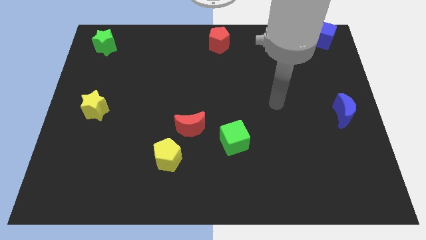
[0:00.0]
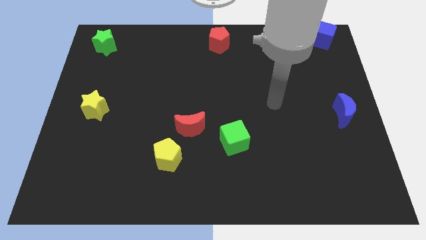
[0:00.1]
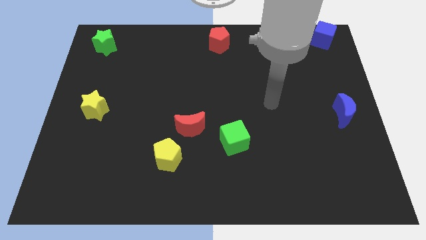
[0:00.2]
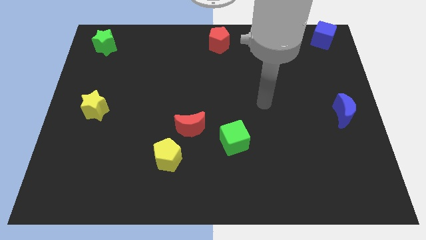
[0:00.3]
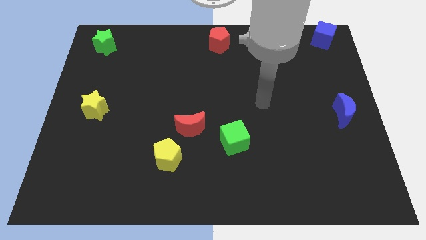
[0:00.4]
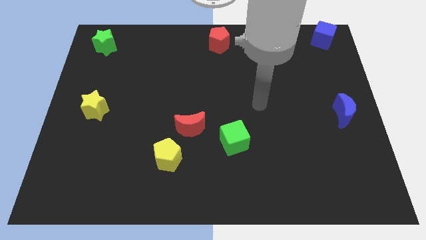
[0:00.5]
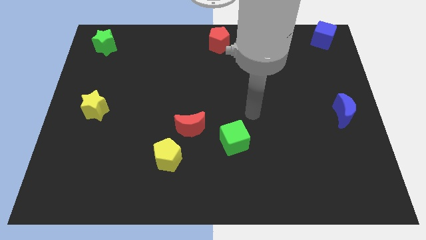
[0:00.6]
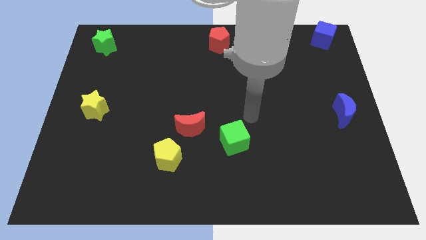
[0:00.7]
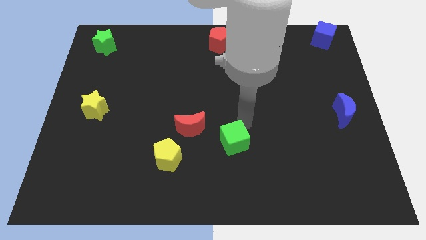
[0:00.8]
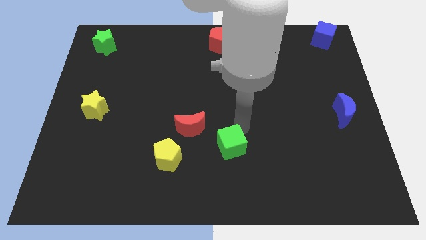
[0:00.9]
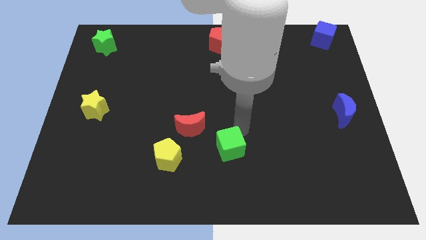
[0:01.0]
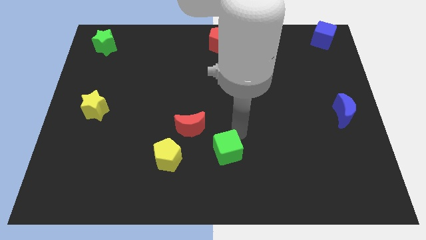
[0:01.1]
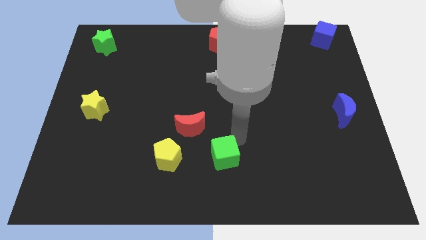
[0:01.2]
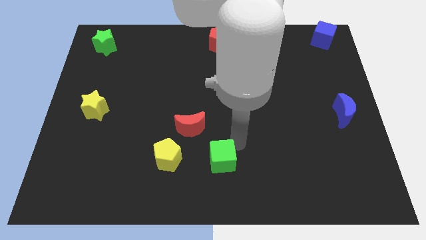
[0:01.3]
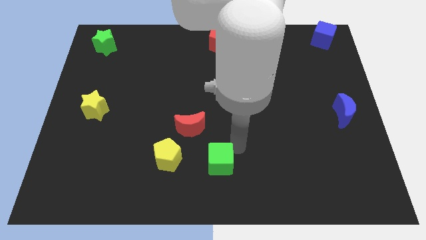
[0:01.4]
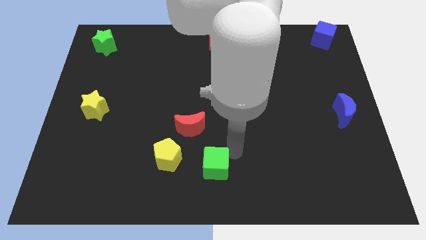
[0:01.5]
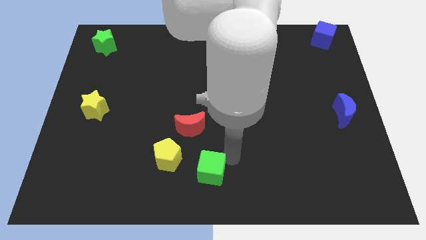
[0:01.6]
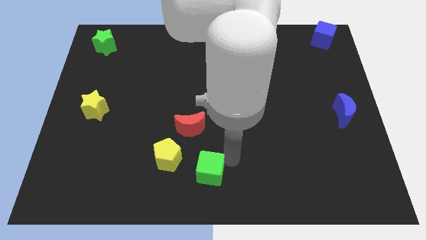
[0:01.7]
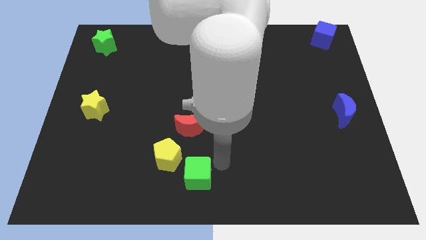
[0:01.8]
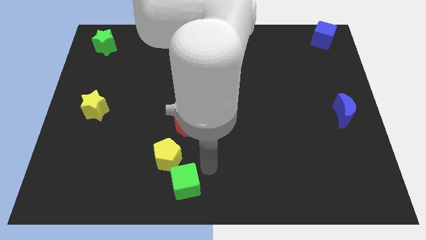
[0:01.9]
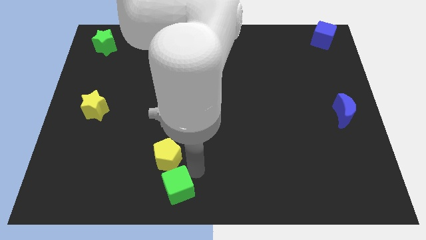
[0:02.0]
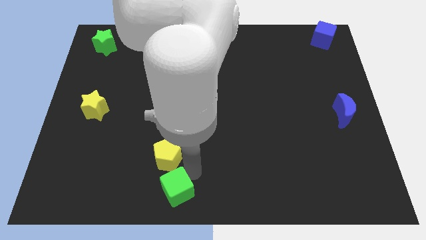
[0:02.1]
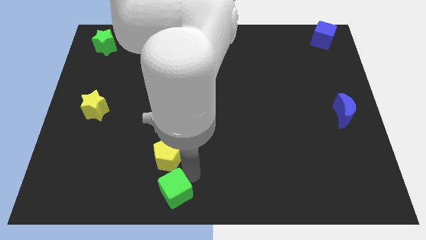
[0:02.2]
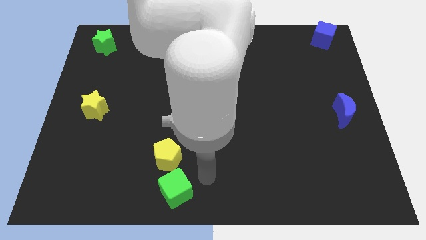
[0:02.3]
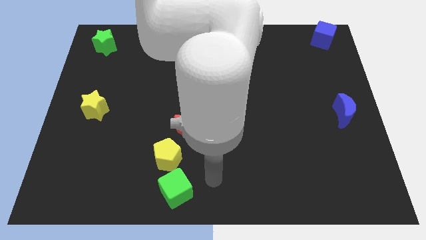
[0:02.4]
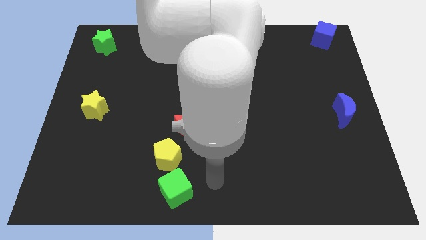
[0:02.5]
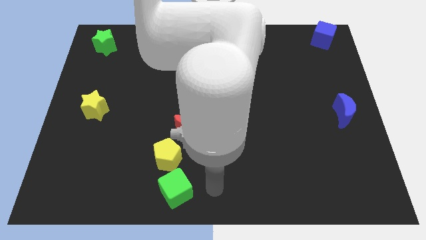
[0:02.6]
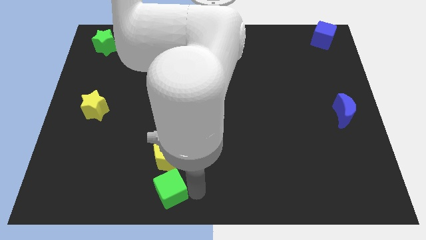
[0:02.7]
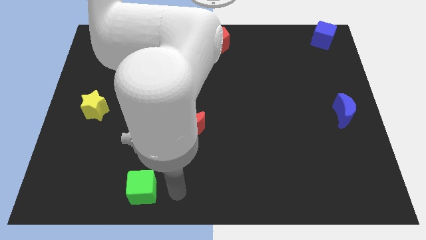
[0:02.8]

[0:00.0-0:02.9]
place the green cube below the yellow pentagon

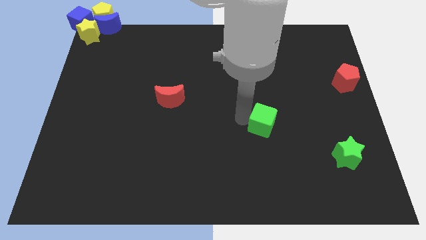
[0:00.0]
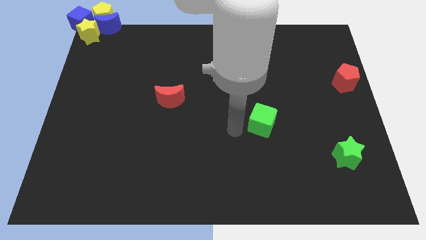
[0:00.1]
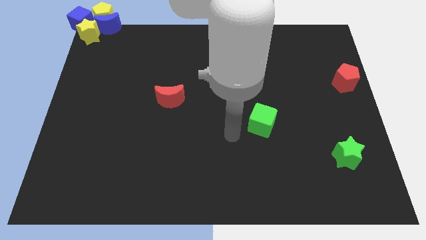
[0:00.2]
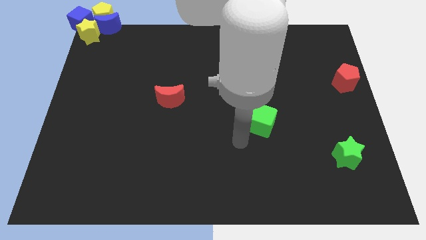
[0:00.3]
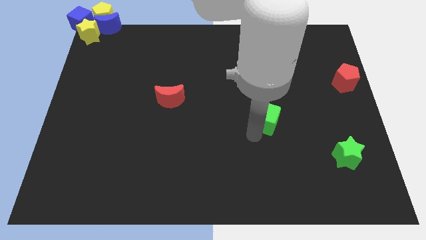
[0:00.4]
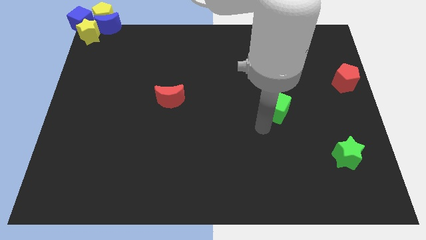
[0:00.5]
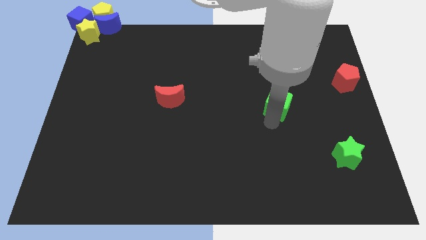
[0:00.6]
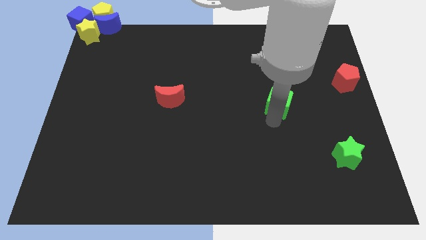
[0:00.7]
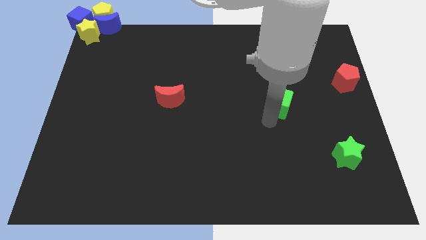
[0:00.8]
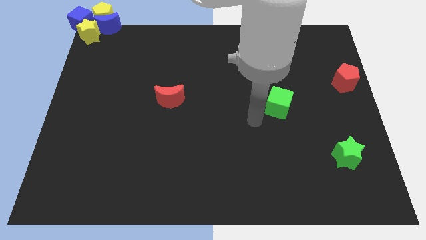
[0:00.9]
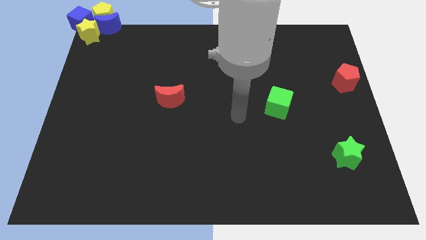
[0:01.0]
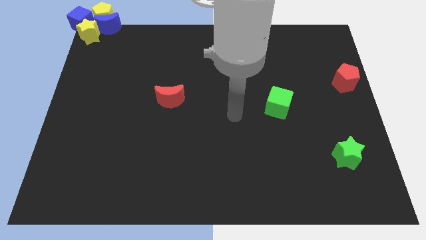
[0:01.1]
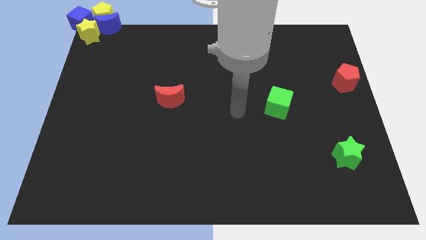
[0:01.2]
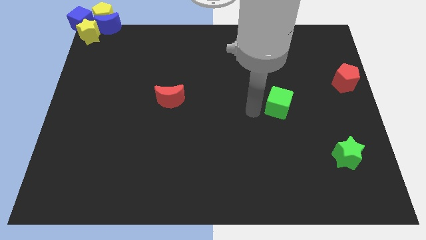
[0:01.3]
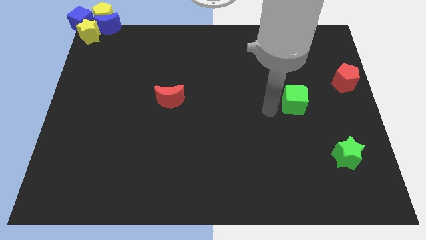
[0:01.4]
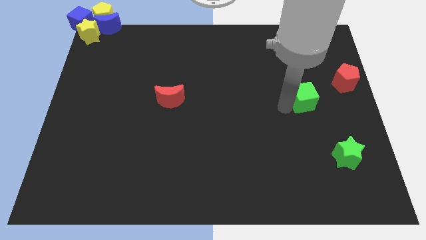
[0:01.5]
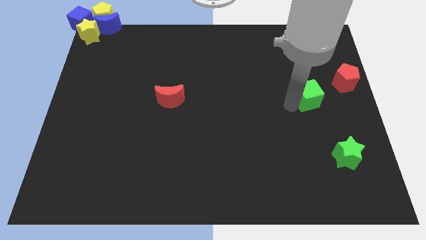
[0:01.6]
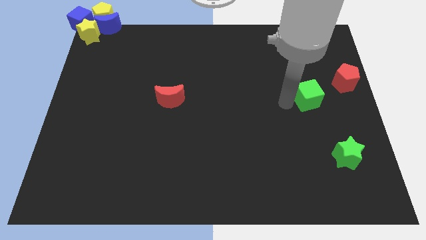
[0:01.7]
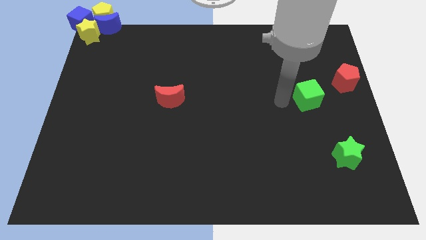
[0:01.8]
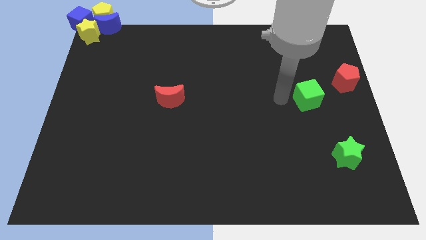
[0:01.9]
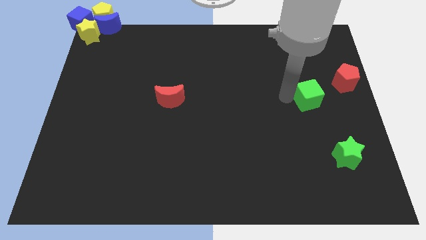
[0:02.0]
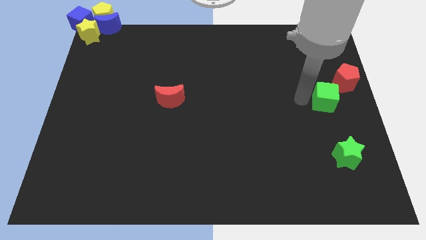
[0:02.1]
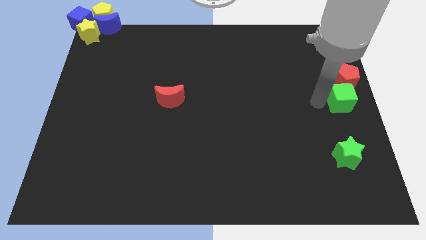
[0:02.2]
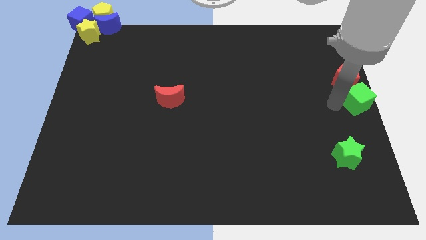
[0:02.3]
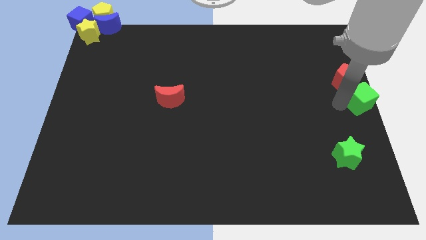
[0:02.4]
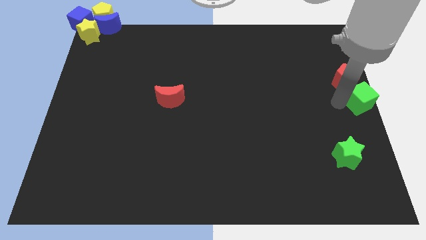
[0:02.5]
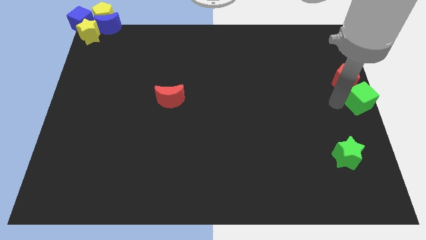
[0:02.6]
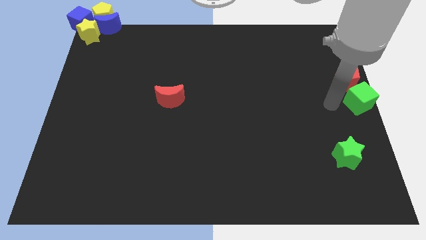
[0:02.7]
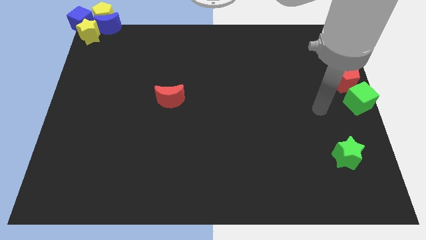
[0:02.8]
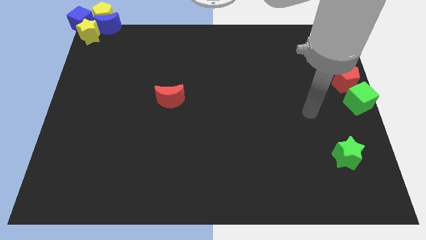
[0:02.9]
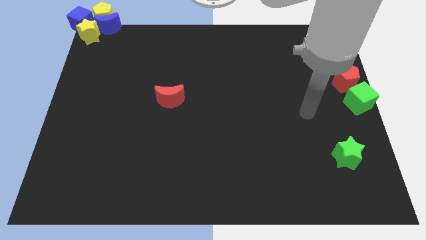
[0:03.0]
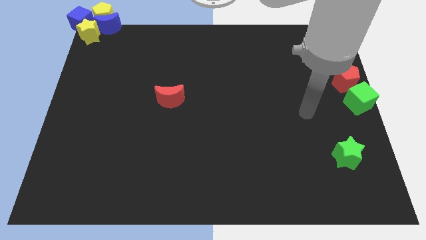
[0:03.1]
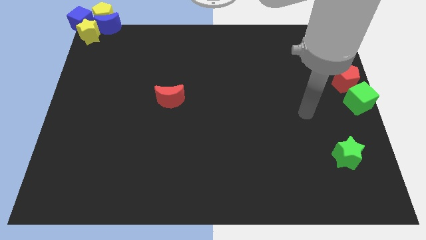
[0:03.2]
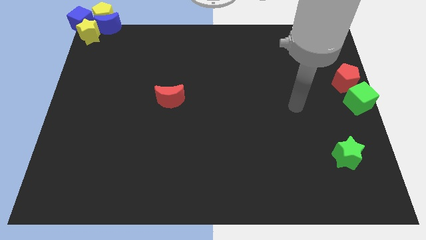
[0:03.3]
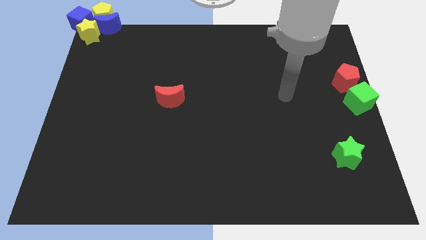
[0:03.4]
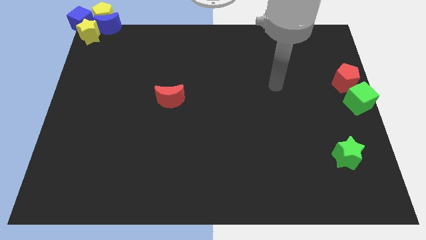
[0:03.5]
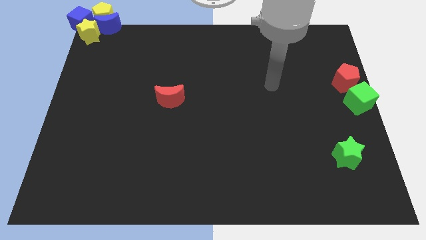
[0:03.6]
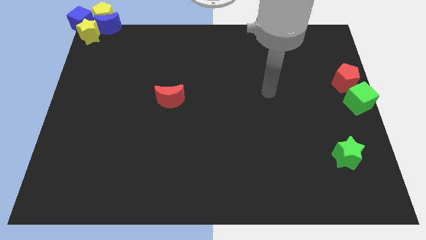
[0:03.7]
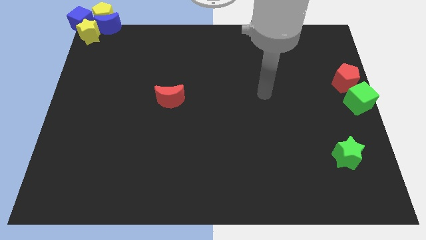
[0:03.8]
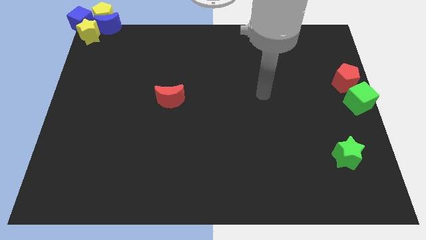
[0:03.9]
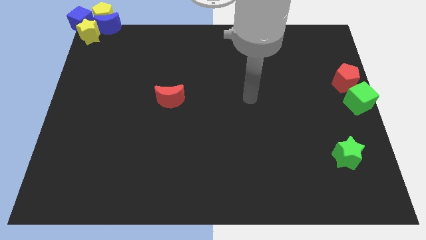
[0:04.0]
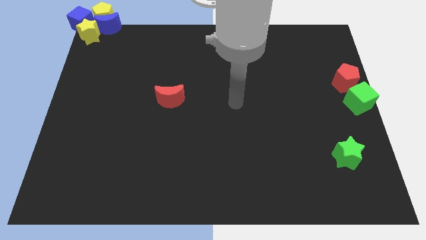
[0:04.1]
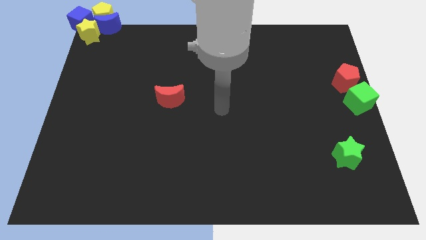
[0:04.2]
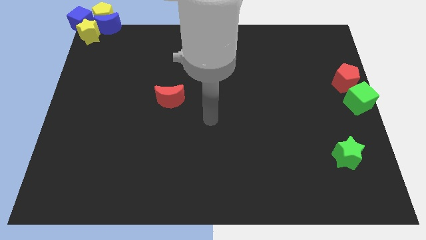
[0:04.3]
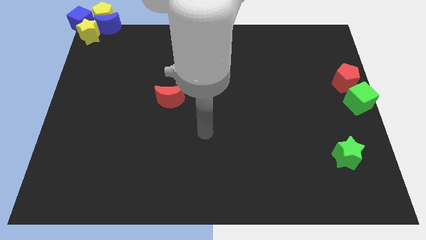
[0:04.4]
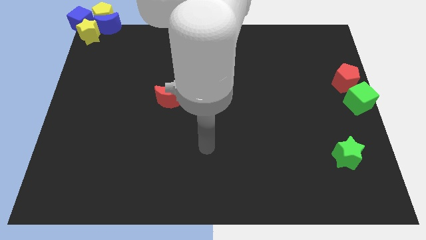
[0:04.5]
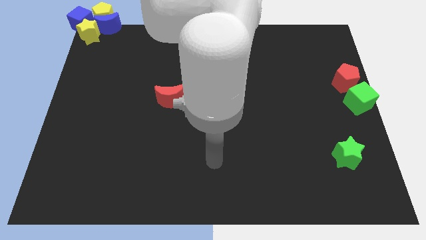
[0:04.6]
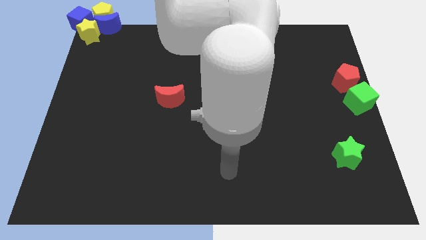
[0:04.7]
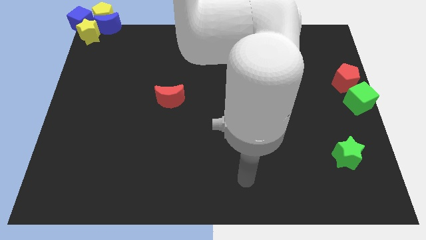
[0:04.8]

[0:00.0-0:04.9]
move green cube towards the red pentagon

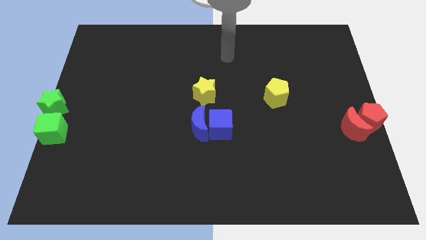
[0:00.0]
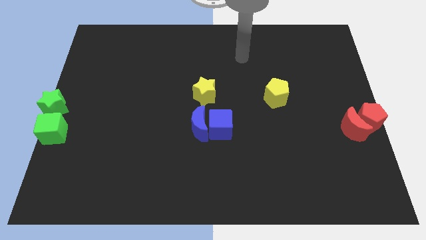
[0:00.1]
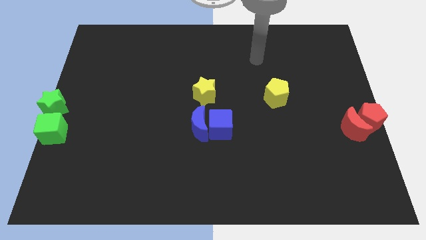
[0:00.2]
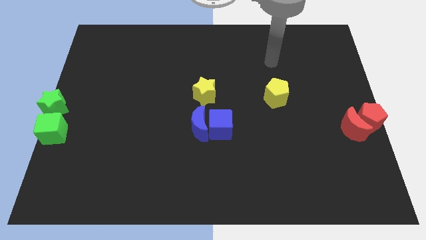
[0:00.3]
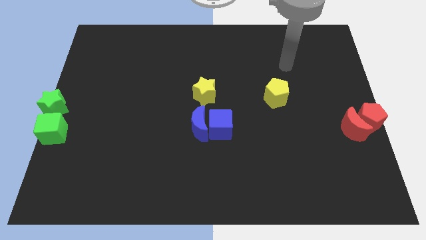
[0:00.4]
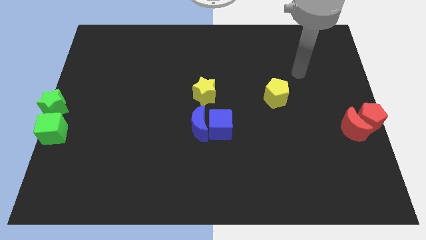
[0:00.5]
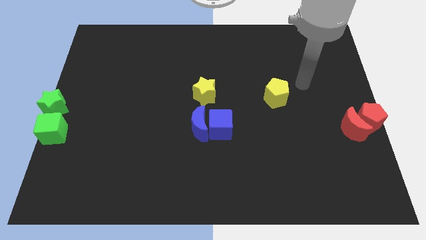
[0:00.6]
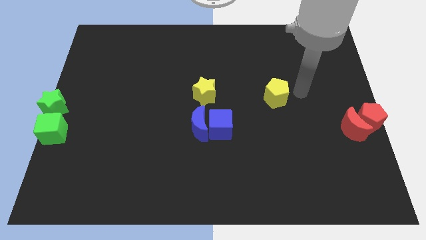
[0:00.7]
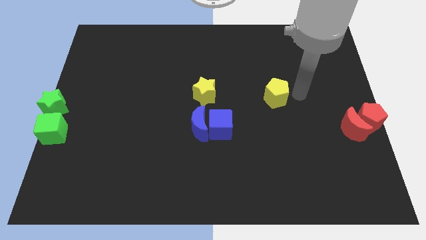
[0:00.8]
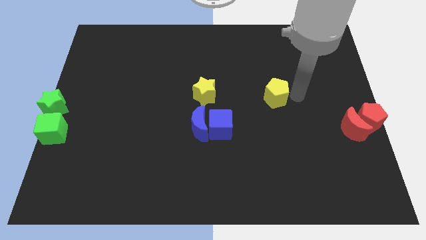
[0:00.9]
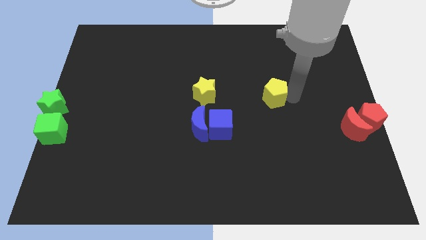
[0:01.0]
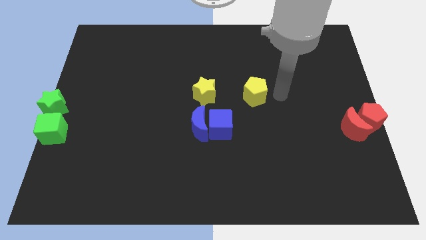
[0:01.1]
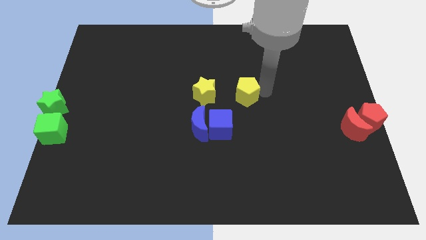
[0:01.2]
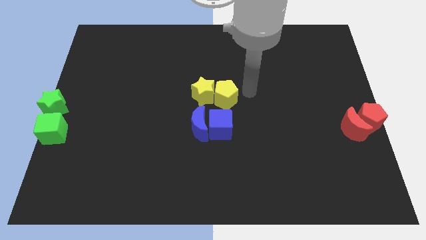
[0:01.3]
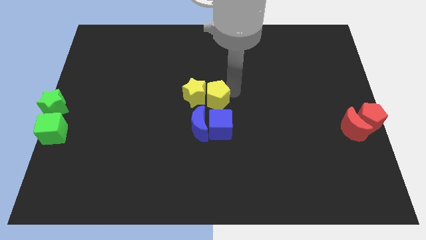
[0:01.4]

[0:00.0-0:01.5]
slide the yellow pentagon to the center
